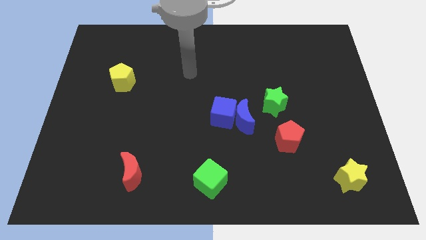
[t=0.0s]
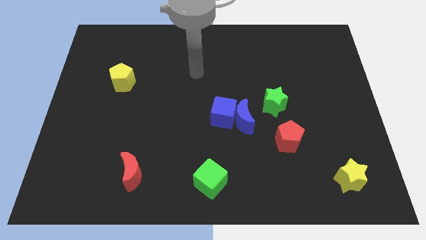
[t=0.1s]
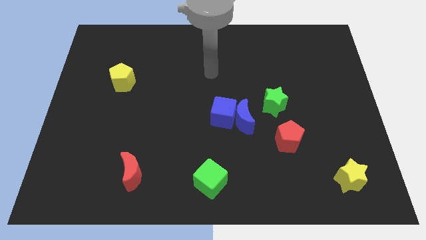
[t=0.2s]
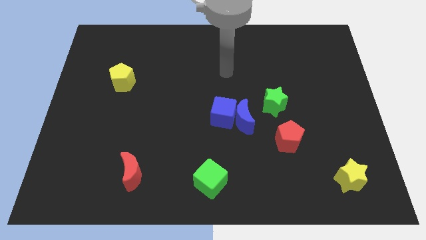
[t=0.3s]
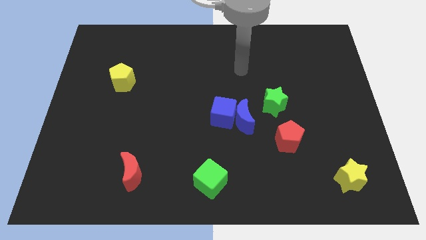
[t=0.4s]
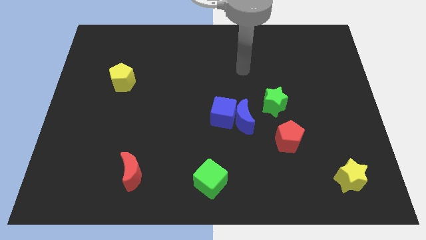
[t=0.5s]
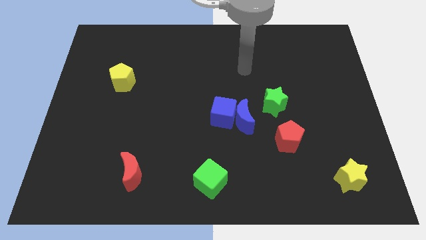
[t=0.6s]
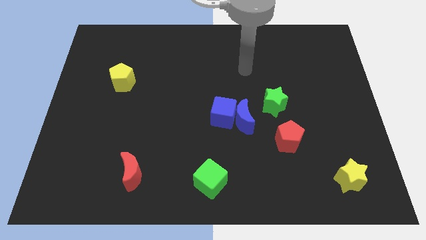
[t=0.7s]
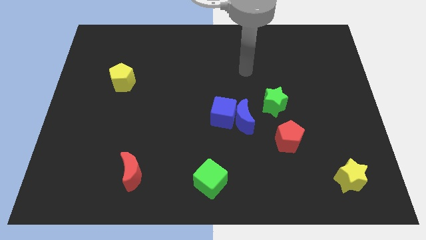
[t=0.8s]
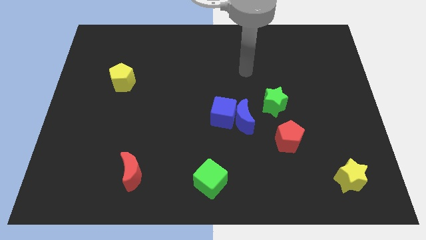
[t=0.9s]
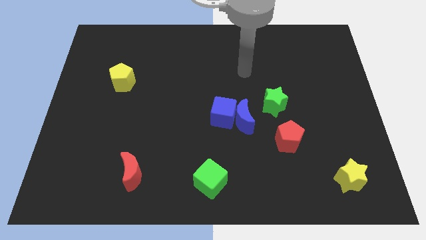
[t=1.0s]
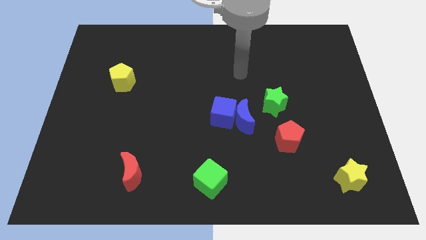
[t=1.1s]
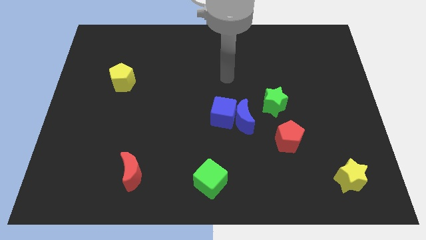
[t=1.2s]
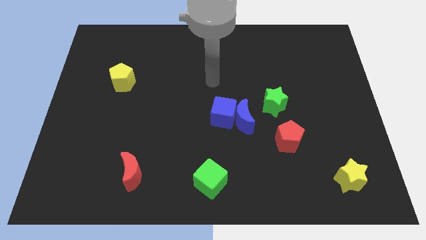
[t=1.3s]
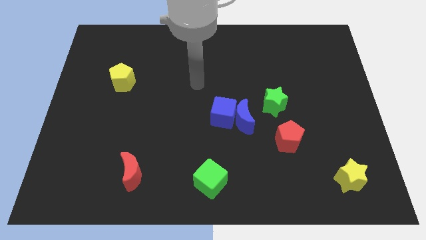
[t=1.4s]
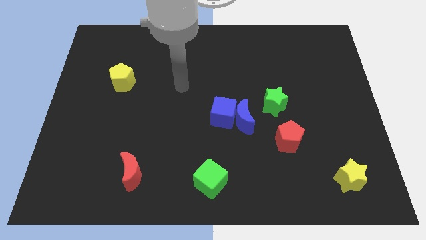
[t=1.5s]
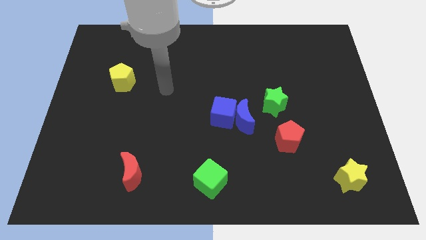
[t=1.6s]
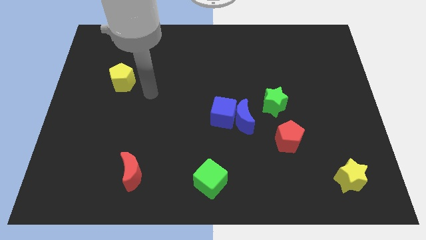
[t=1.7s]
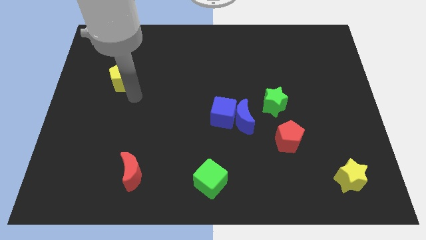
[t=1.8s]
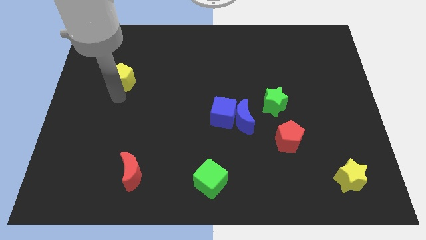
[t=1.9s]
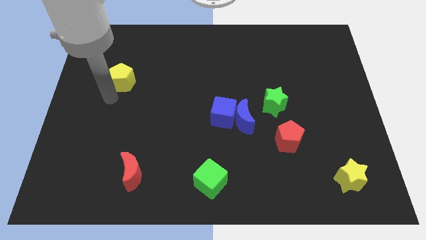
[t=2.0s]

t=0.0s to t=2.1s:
put your hand vertically below the yellow pentagon

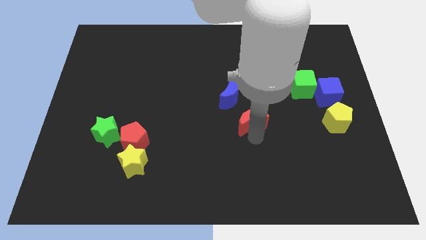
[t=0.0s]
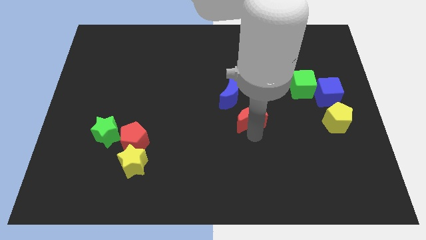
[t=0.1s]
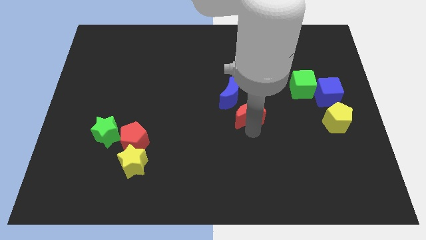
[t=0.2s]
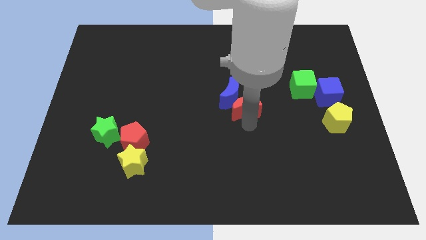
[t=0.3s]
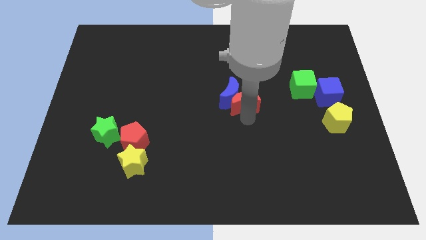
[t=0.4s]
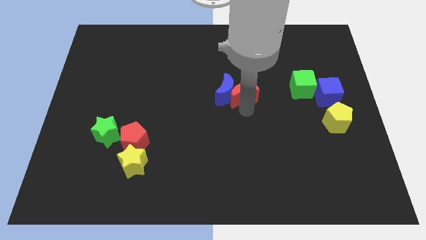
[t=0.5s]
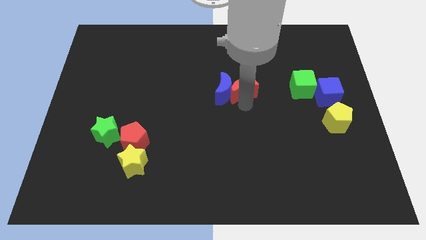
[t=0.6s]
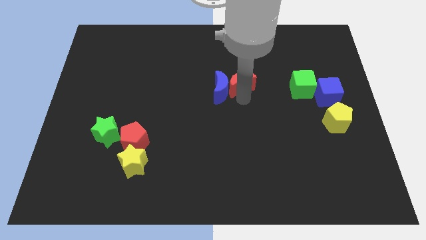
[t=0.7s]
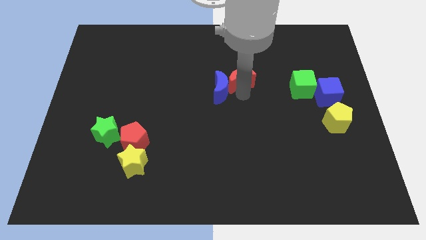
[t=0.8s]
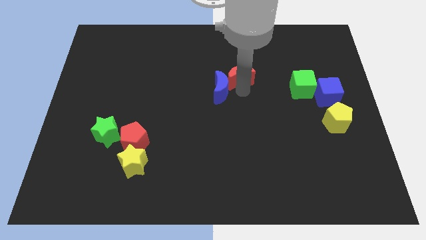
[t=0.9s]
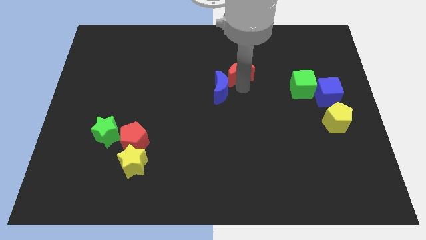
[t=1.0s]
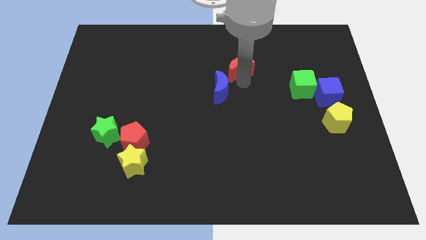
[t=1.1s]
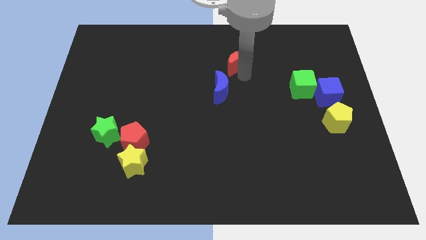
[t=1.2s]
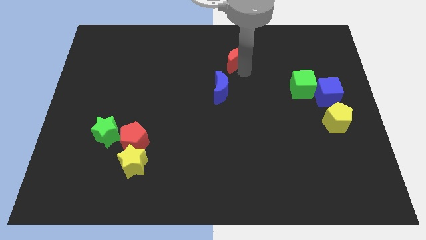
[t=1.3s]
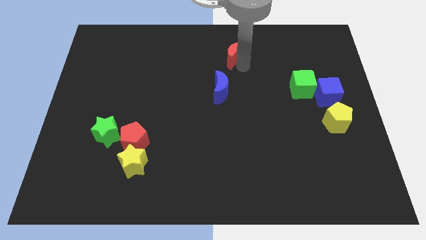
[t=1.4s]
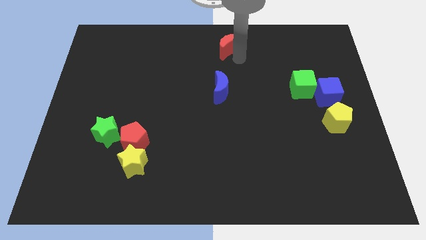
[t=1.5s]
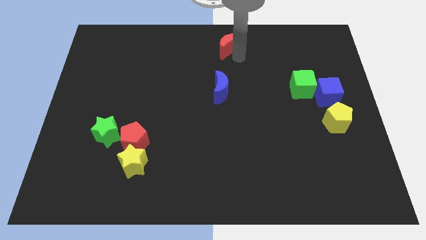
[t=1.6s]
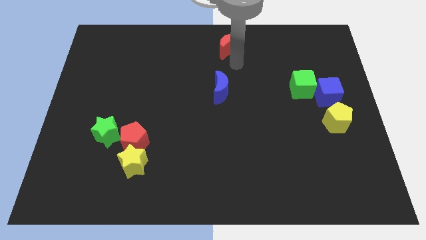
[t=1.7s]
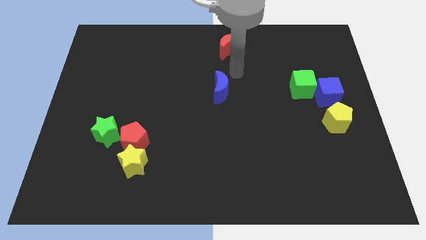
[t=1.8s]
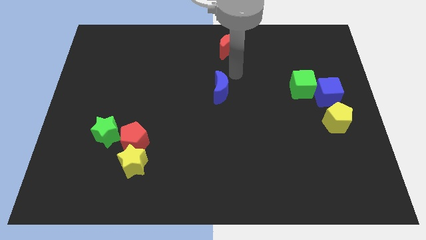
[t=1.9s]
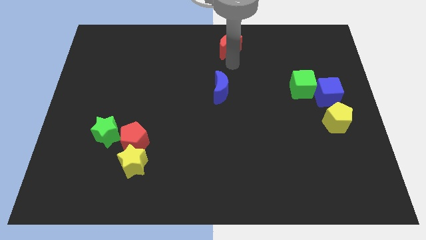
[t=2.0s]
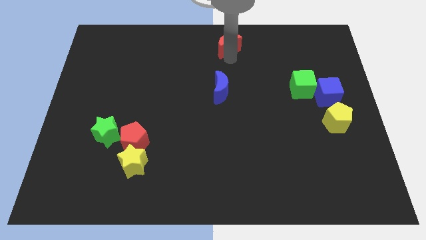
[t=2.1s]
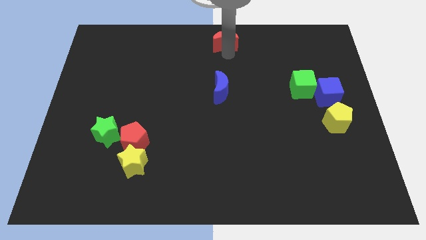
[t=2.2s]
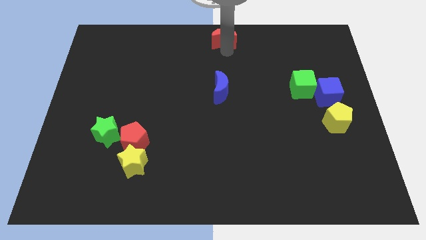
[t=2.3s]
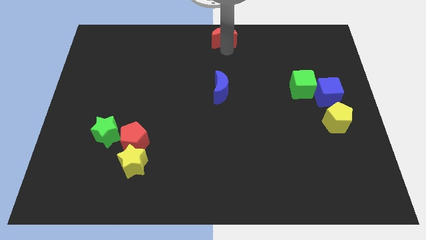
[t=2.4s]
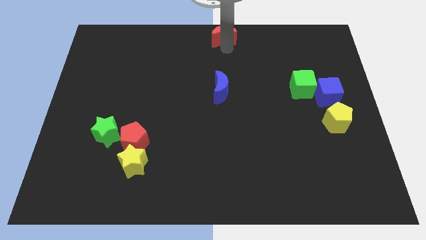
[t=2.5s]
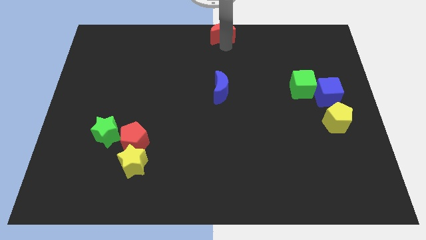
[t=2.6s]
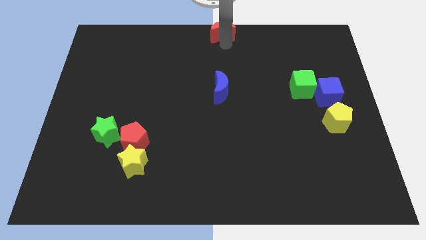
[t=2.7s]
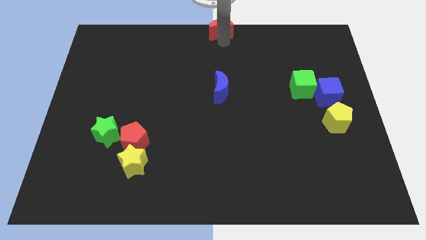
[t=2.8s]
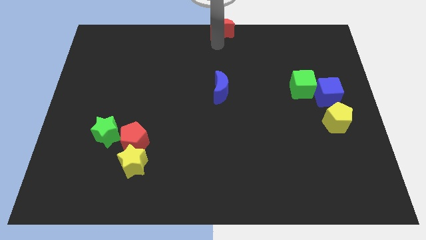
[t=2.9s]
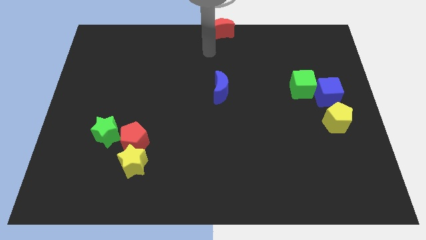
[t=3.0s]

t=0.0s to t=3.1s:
move red moon to the top center

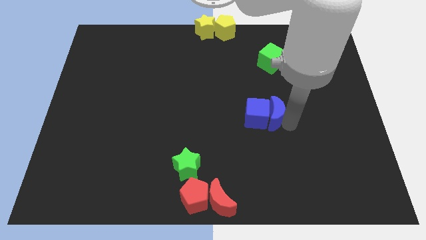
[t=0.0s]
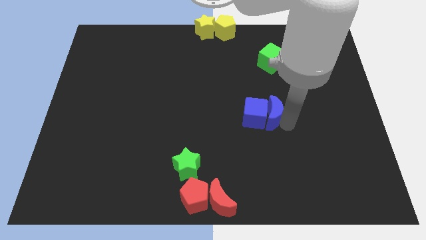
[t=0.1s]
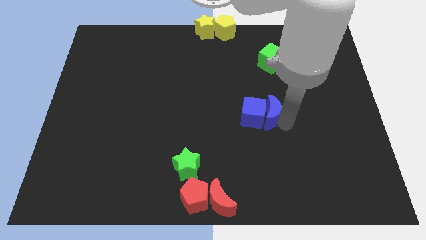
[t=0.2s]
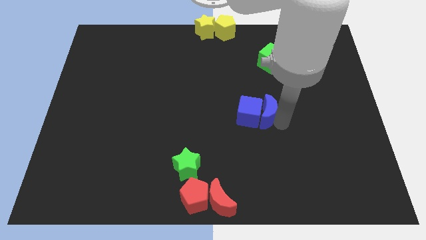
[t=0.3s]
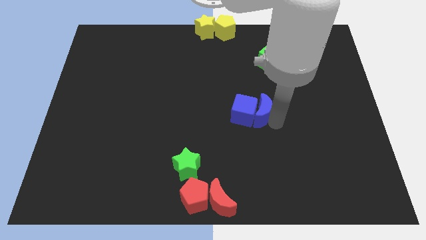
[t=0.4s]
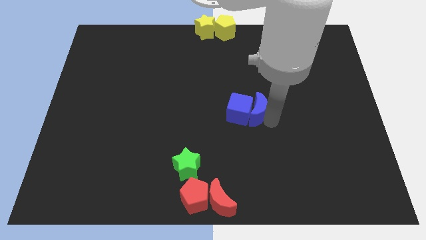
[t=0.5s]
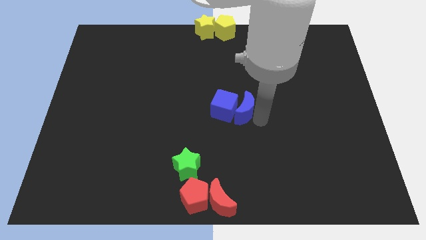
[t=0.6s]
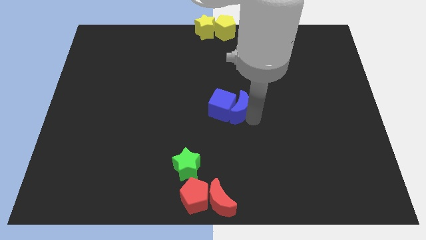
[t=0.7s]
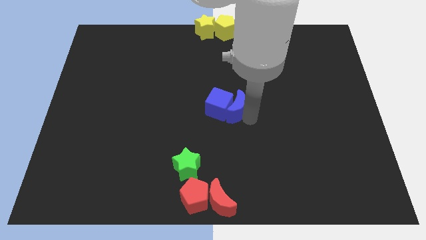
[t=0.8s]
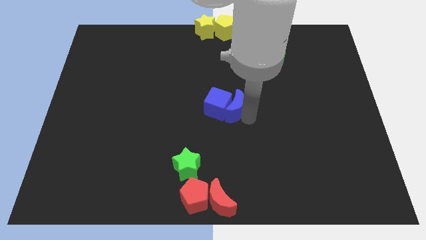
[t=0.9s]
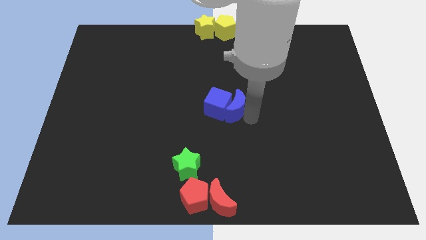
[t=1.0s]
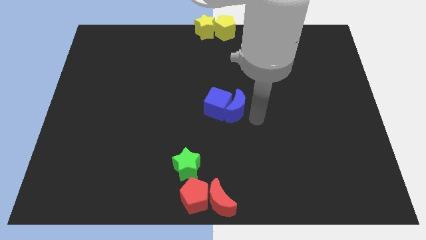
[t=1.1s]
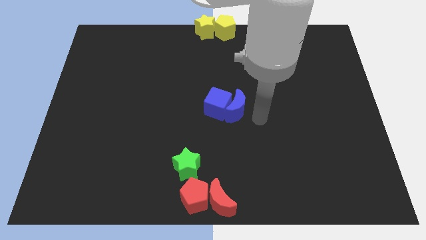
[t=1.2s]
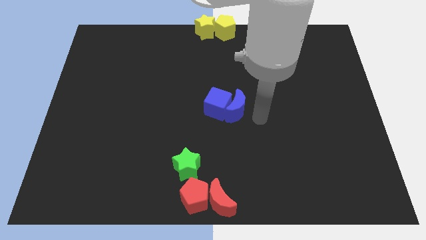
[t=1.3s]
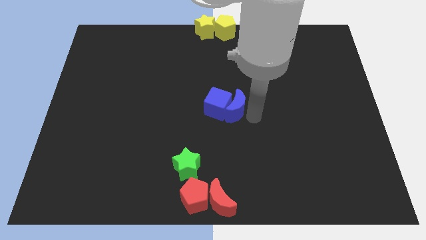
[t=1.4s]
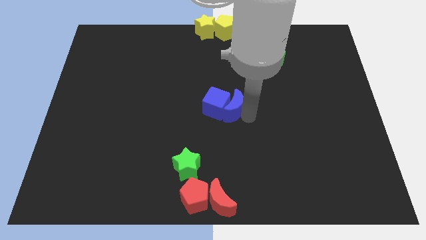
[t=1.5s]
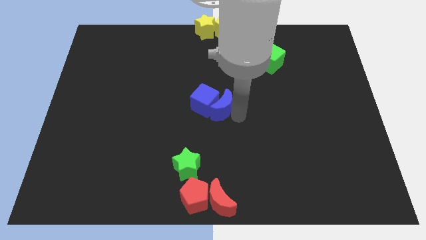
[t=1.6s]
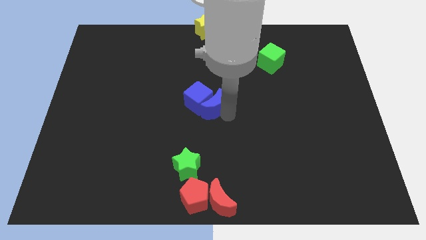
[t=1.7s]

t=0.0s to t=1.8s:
place the blue blocks at the center of the board

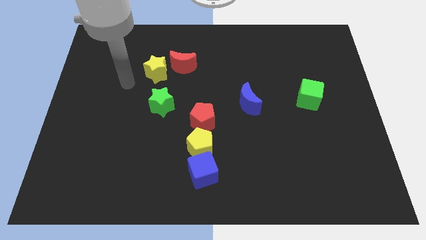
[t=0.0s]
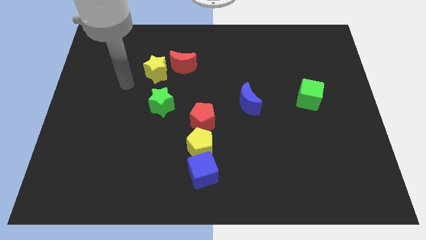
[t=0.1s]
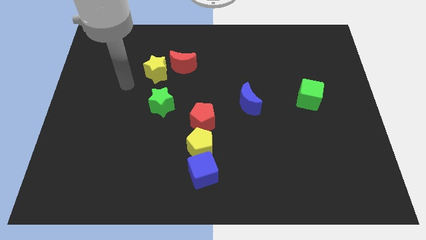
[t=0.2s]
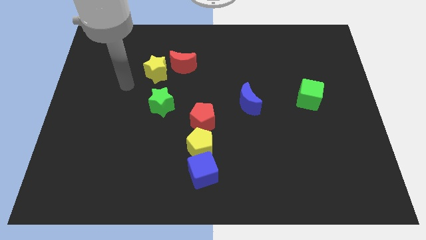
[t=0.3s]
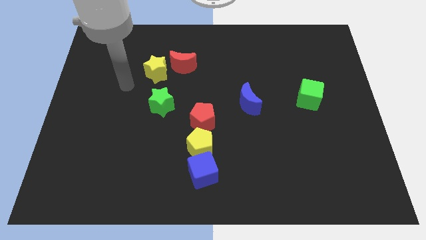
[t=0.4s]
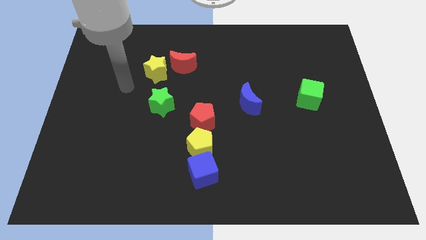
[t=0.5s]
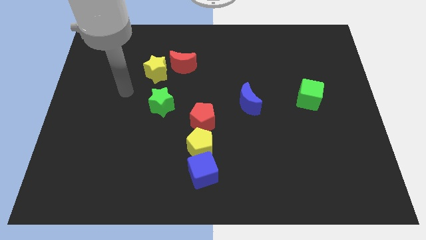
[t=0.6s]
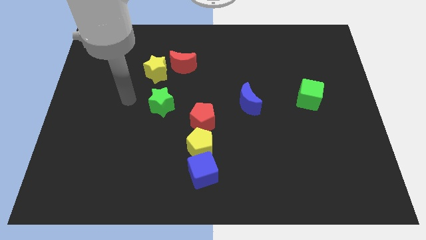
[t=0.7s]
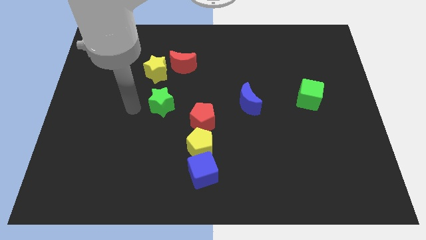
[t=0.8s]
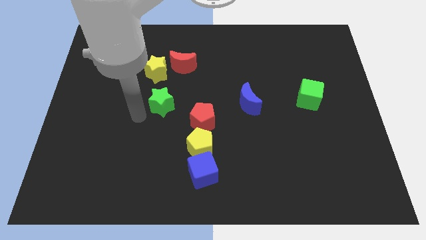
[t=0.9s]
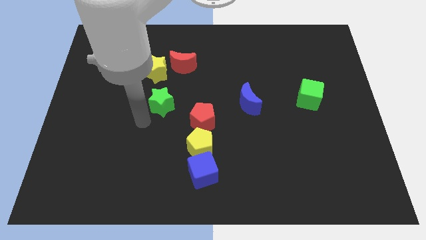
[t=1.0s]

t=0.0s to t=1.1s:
move your arm down and to the right

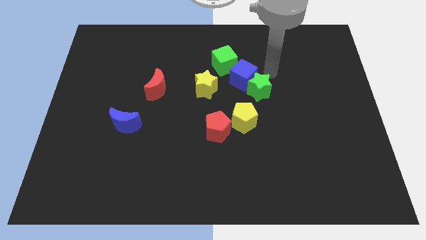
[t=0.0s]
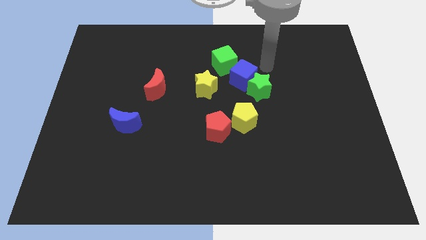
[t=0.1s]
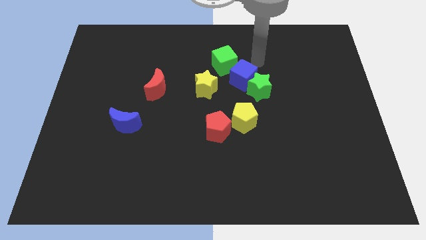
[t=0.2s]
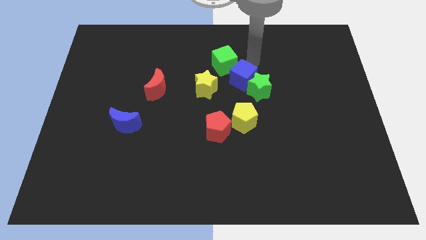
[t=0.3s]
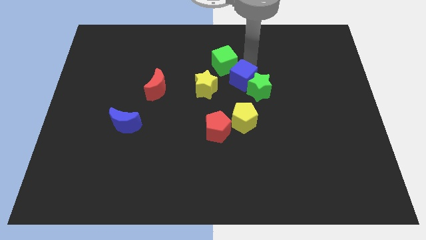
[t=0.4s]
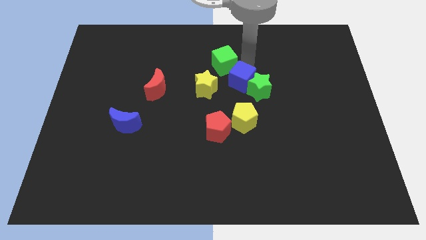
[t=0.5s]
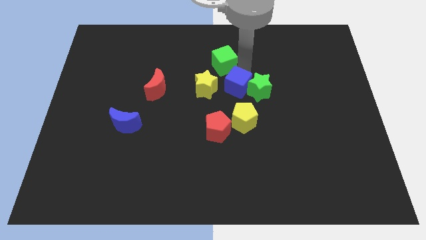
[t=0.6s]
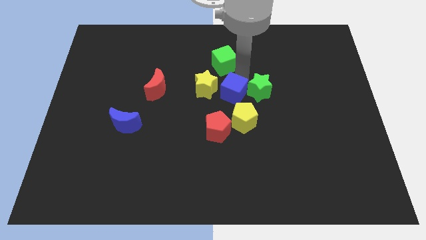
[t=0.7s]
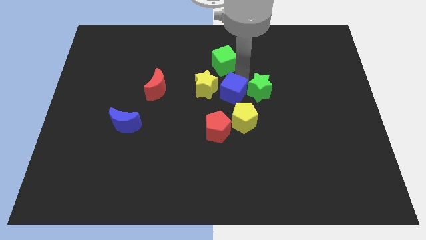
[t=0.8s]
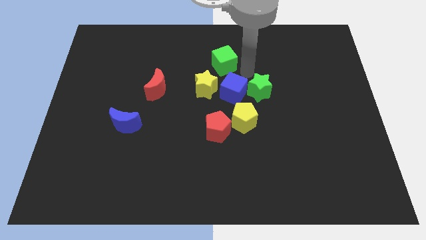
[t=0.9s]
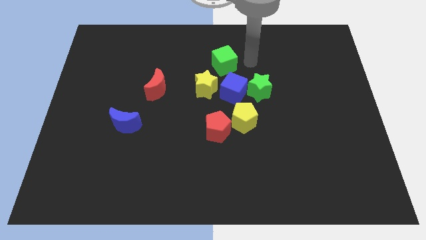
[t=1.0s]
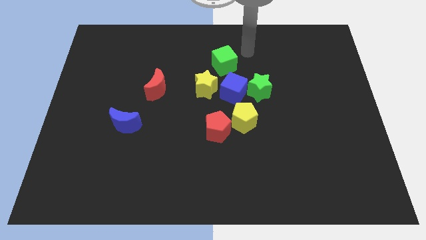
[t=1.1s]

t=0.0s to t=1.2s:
push the blue cube slightly to the bottom
